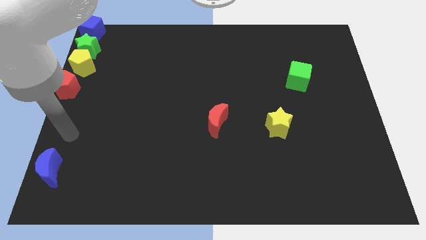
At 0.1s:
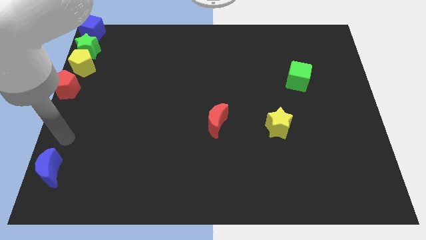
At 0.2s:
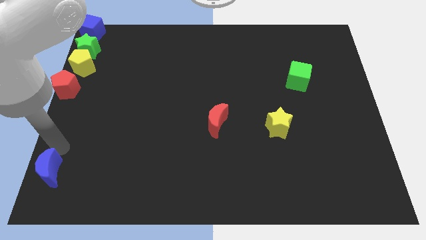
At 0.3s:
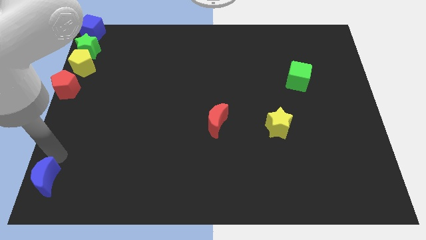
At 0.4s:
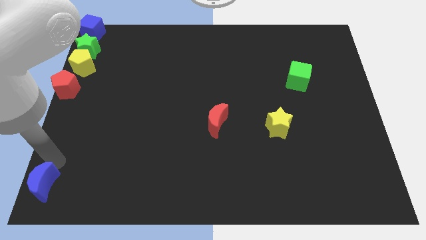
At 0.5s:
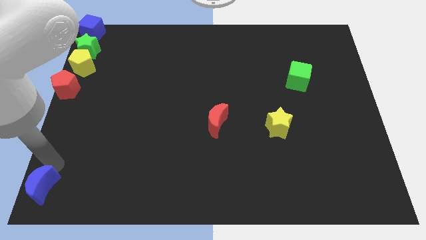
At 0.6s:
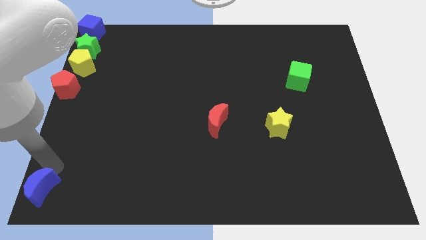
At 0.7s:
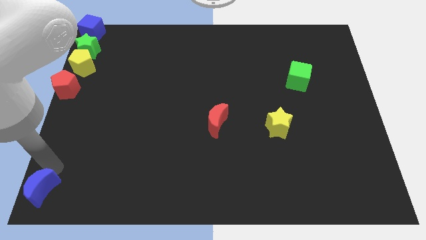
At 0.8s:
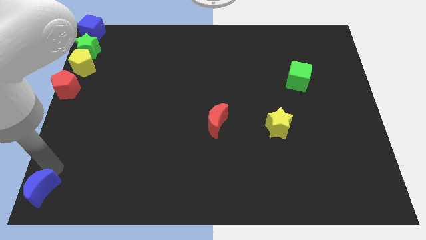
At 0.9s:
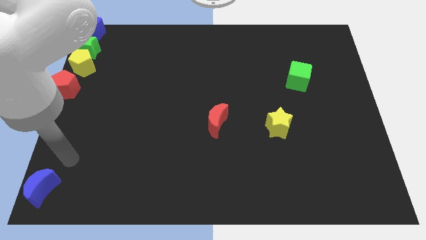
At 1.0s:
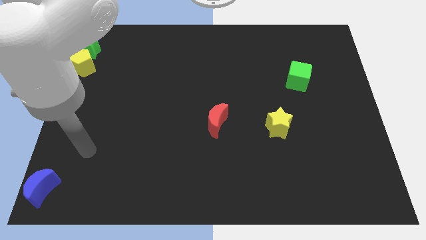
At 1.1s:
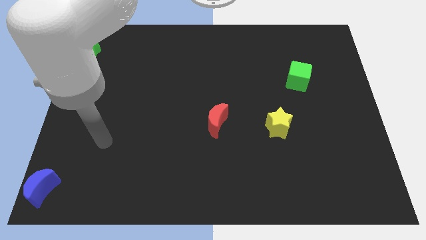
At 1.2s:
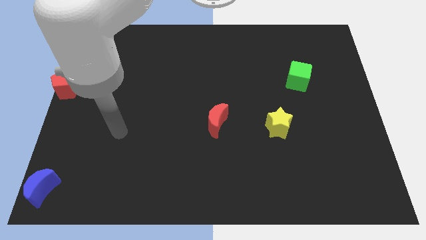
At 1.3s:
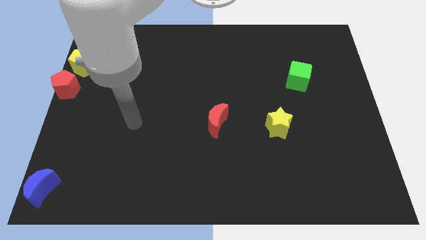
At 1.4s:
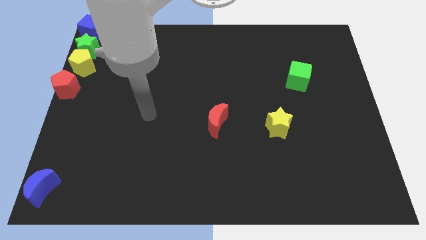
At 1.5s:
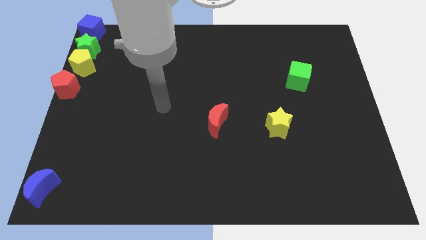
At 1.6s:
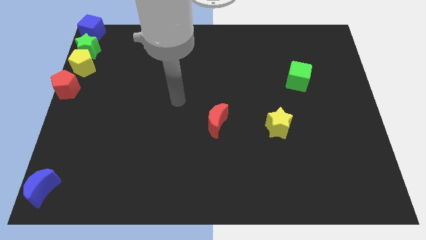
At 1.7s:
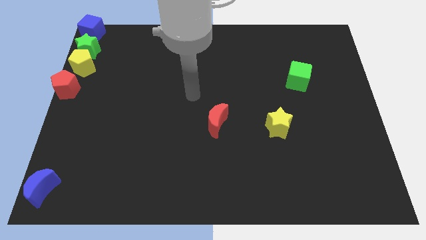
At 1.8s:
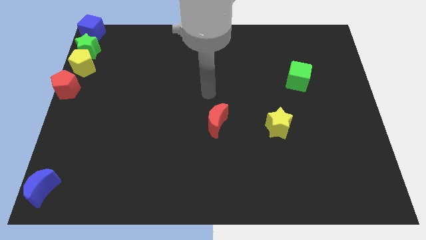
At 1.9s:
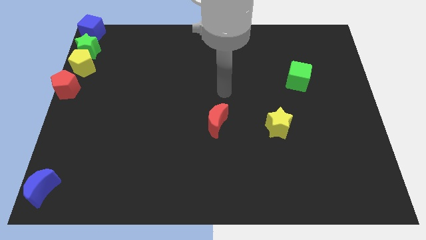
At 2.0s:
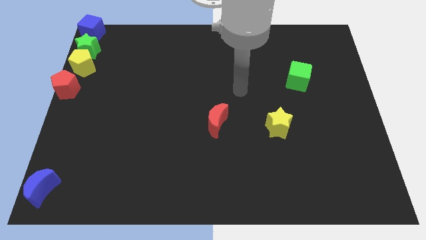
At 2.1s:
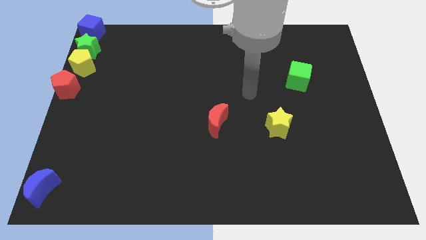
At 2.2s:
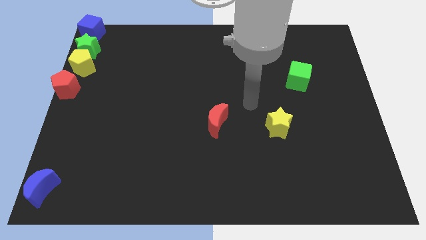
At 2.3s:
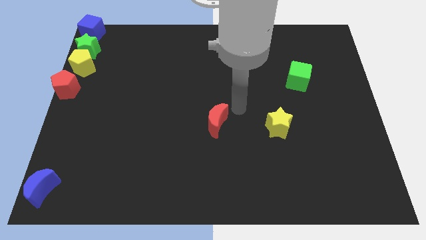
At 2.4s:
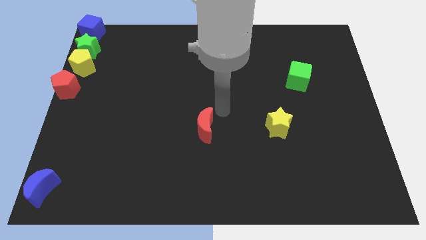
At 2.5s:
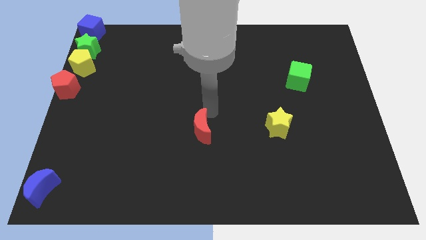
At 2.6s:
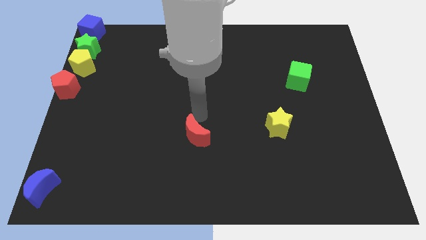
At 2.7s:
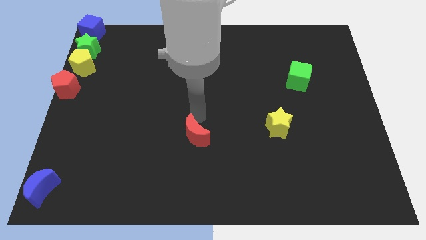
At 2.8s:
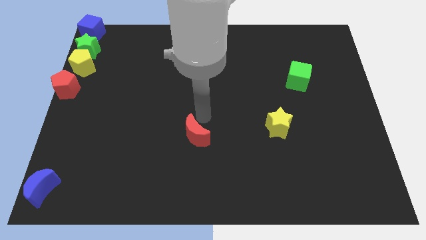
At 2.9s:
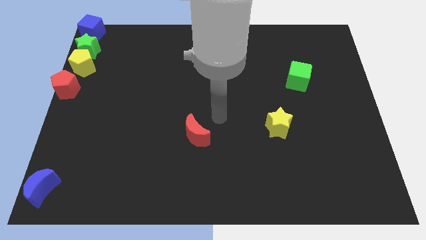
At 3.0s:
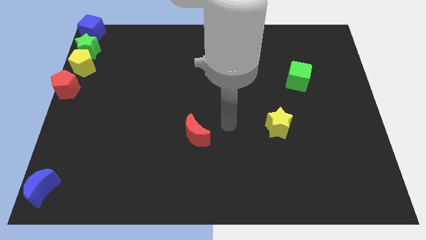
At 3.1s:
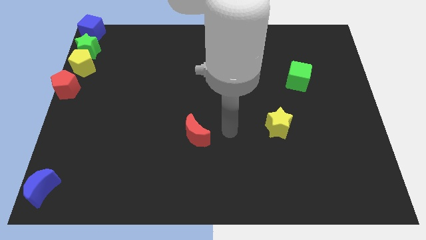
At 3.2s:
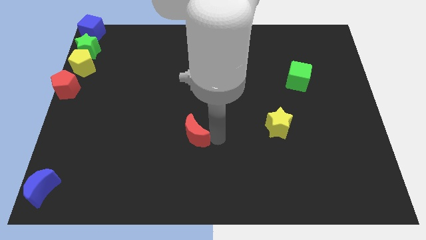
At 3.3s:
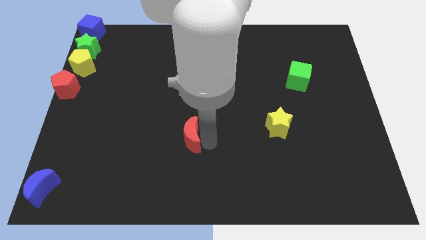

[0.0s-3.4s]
move red moon slightly down

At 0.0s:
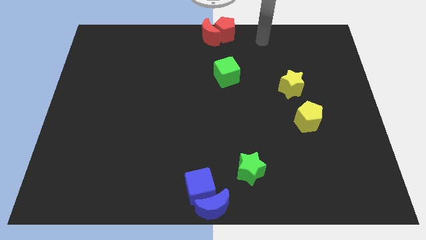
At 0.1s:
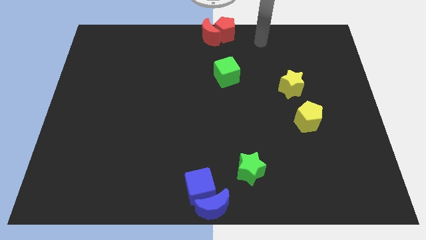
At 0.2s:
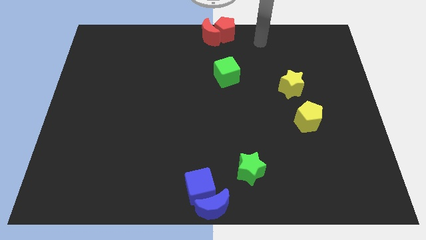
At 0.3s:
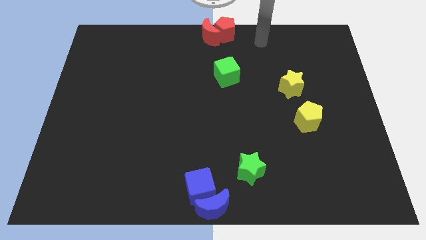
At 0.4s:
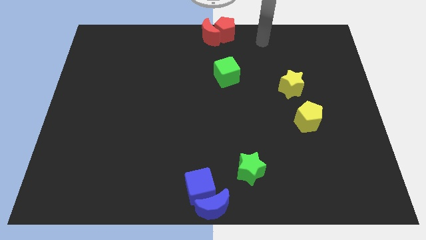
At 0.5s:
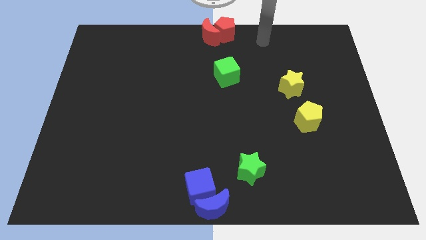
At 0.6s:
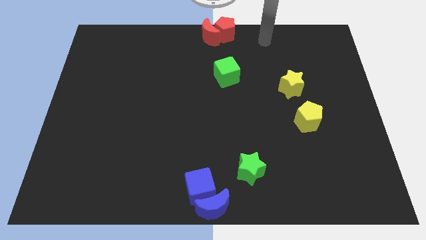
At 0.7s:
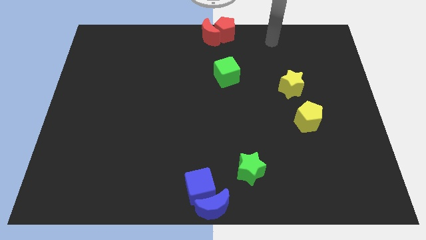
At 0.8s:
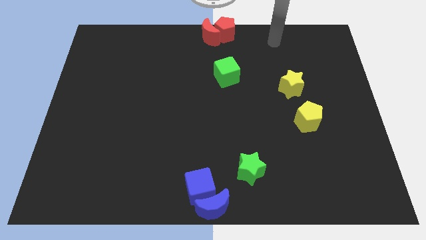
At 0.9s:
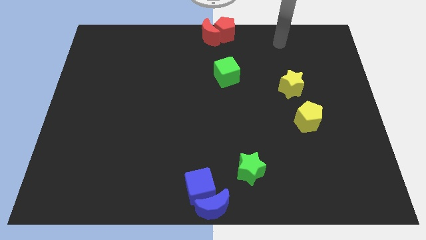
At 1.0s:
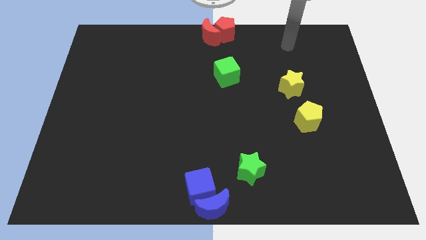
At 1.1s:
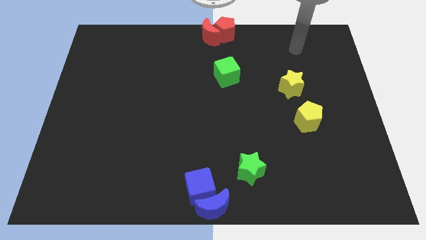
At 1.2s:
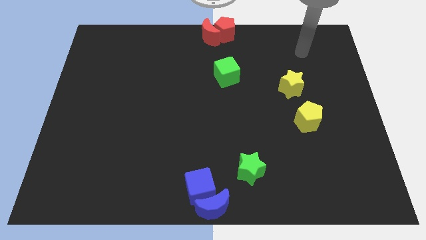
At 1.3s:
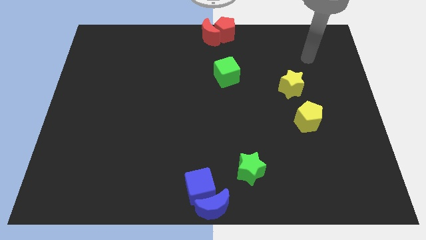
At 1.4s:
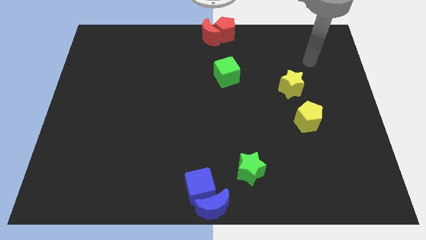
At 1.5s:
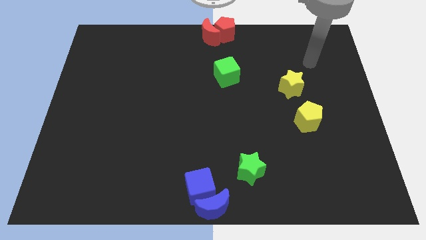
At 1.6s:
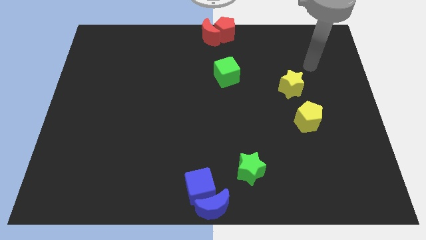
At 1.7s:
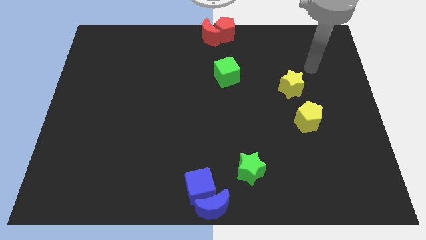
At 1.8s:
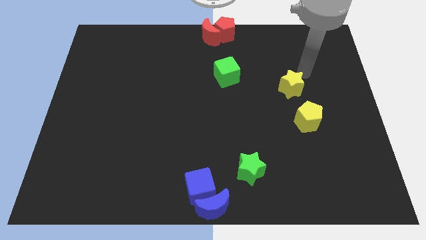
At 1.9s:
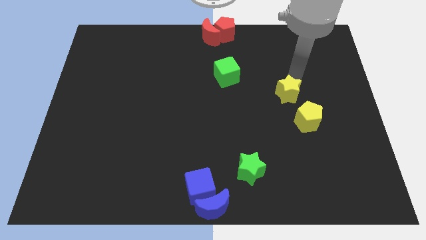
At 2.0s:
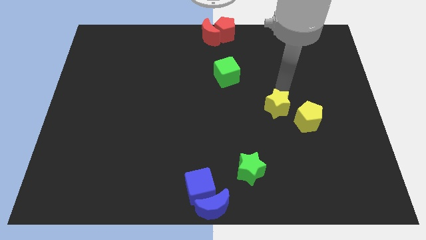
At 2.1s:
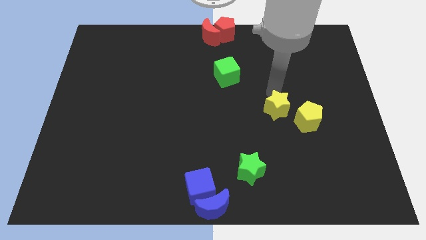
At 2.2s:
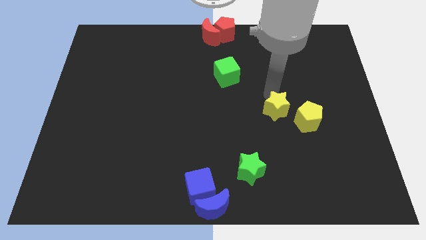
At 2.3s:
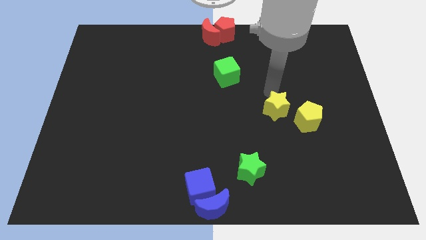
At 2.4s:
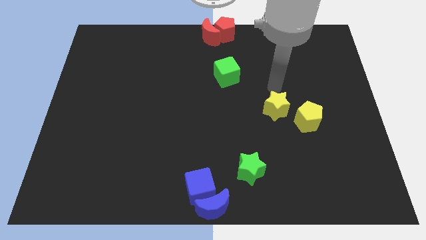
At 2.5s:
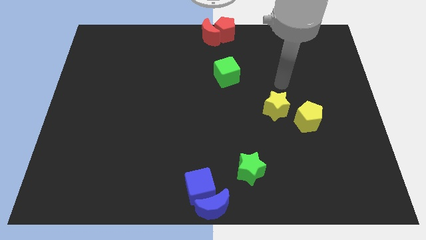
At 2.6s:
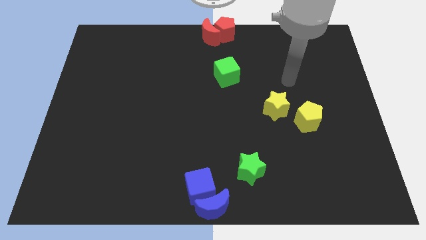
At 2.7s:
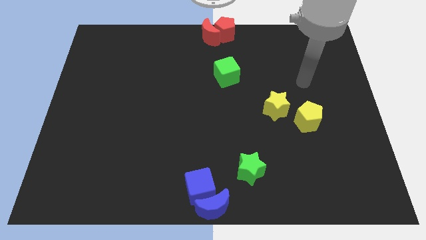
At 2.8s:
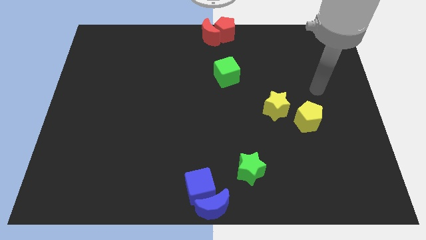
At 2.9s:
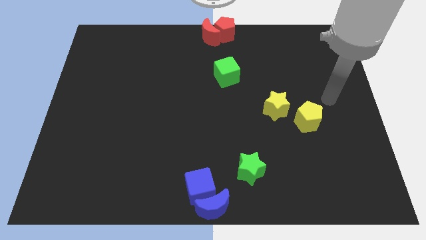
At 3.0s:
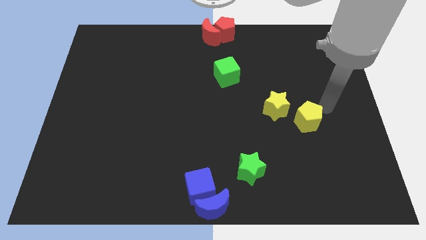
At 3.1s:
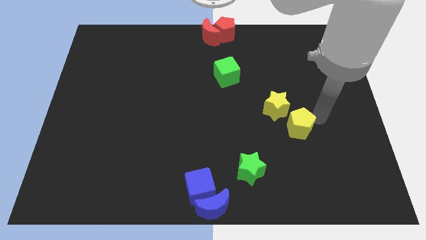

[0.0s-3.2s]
move the yellow star to the left side of the yellow pentagon

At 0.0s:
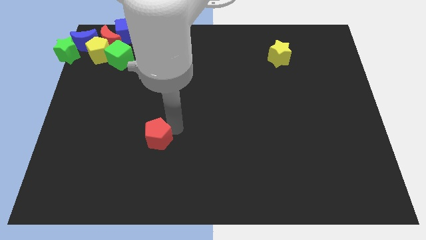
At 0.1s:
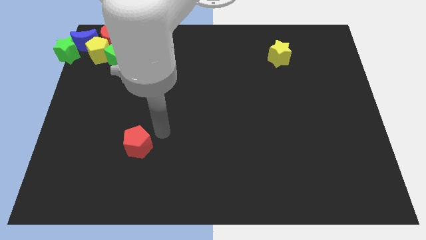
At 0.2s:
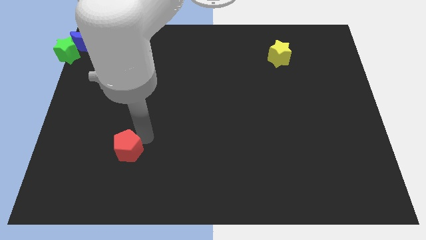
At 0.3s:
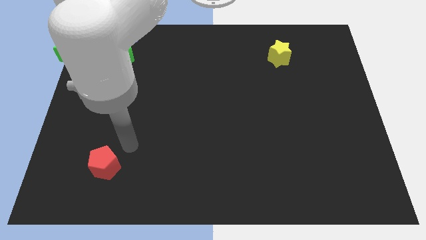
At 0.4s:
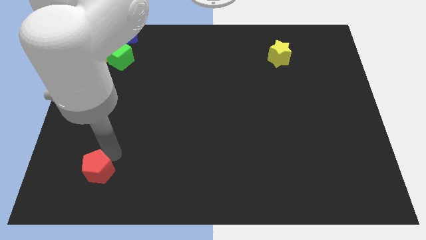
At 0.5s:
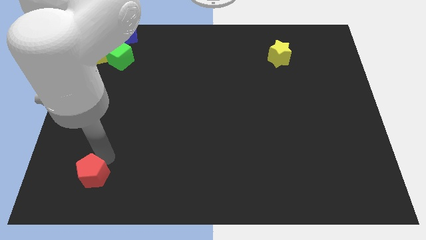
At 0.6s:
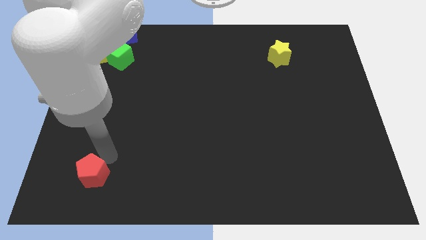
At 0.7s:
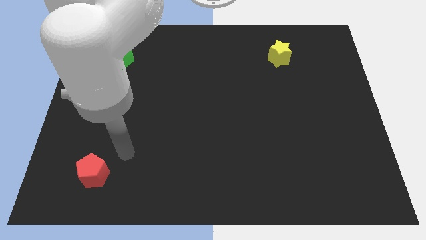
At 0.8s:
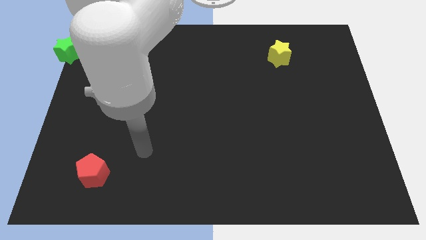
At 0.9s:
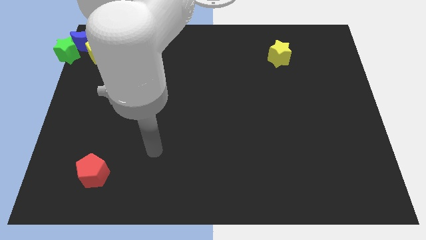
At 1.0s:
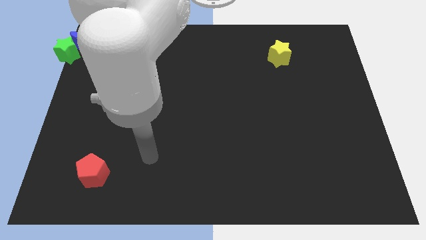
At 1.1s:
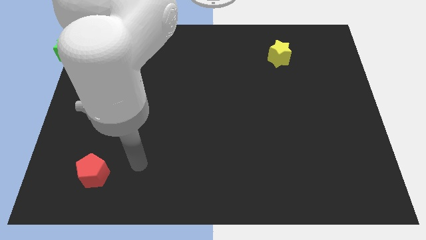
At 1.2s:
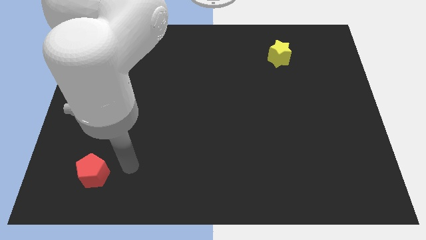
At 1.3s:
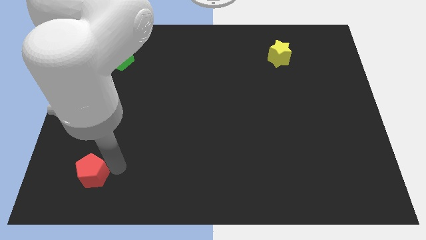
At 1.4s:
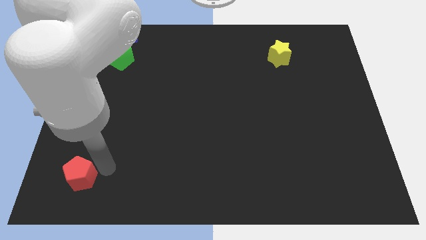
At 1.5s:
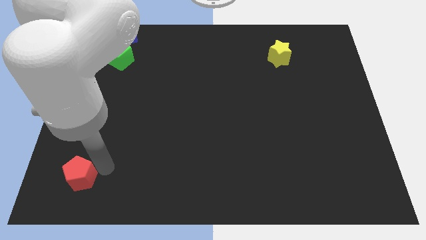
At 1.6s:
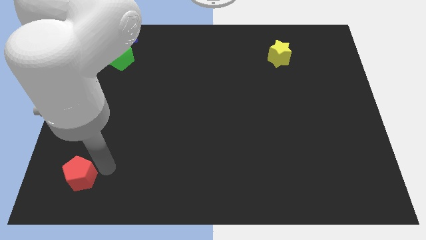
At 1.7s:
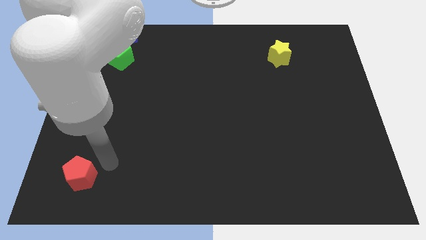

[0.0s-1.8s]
move the red pentagon to the bottom left of the board

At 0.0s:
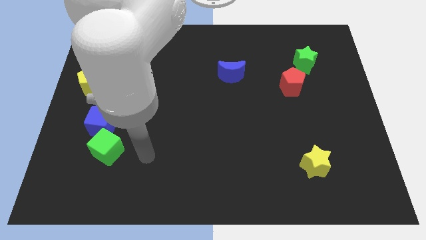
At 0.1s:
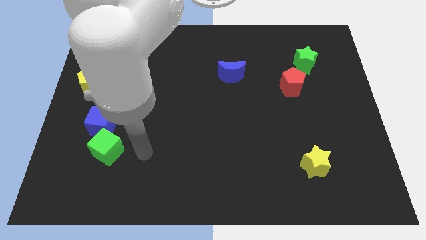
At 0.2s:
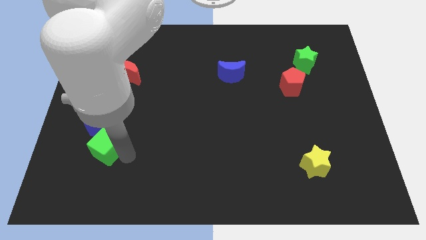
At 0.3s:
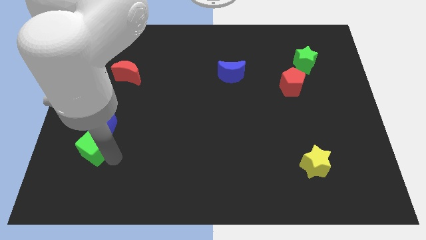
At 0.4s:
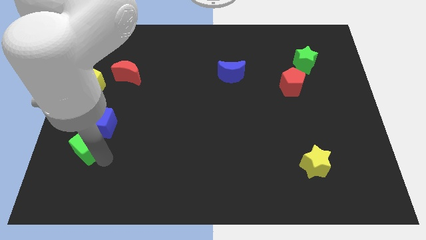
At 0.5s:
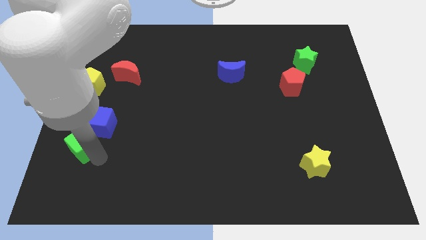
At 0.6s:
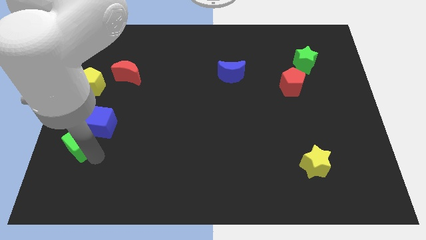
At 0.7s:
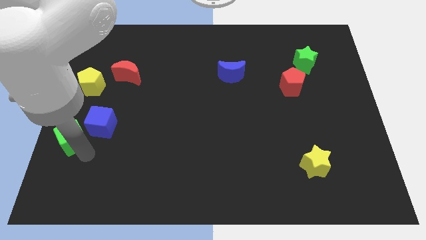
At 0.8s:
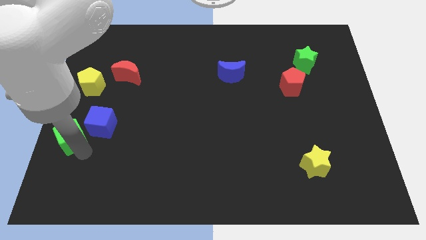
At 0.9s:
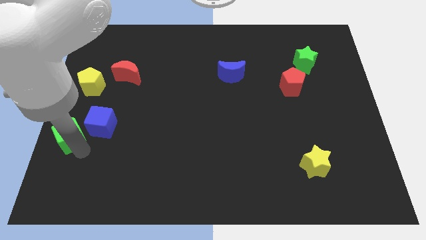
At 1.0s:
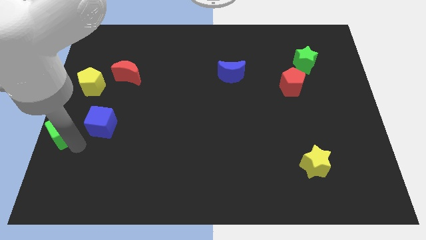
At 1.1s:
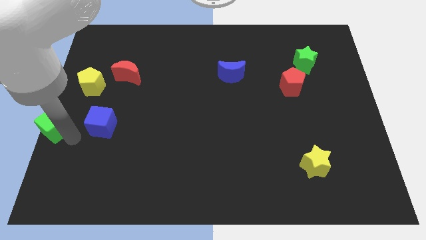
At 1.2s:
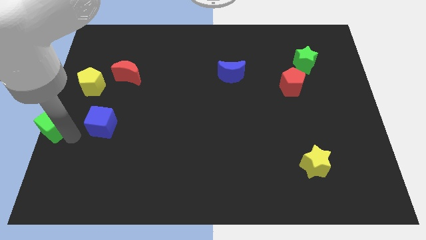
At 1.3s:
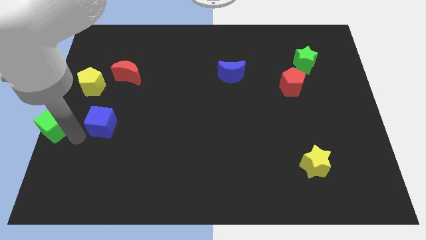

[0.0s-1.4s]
place the green cube to the left side of the blue cube
